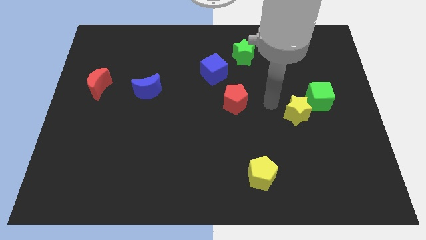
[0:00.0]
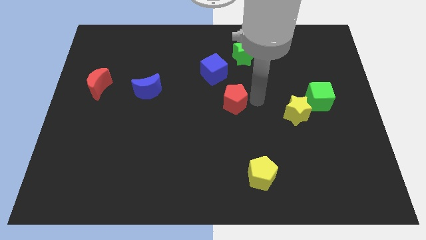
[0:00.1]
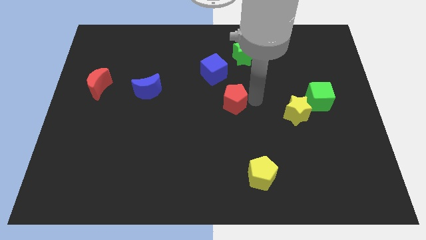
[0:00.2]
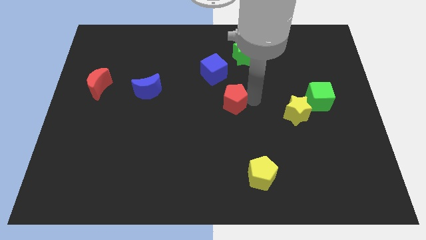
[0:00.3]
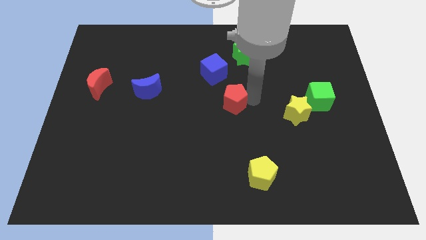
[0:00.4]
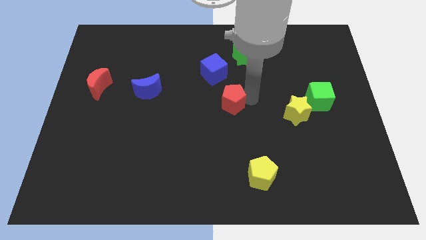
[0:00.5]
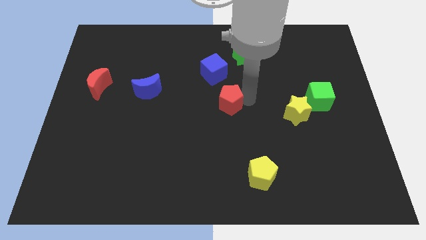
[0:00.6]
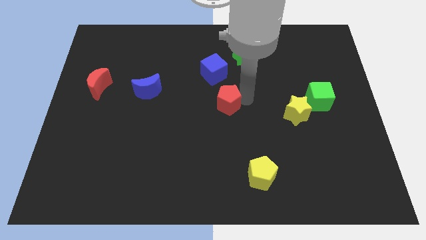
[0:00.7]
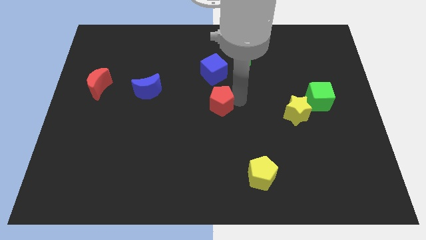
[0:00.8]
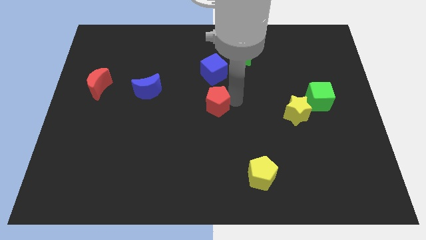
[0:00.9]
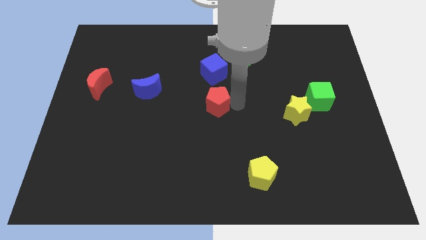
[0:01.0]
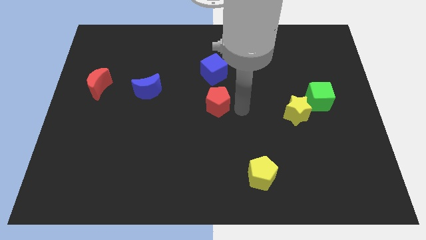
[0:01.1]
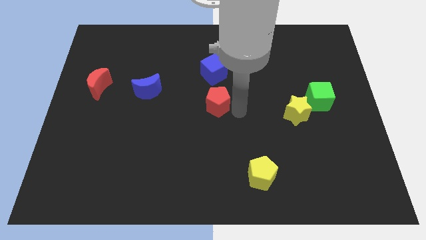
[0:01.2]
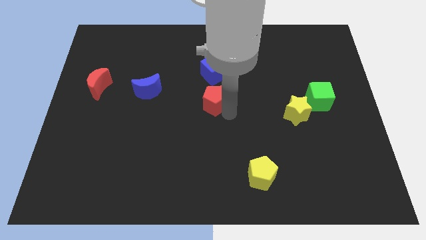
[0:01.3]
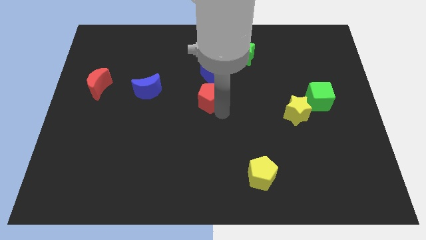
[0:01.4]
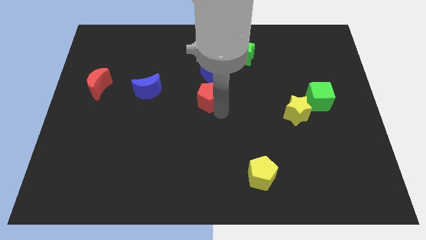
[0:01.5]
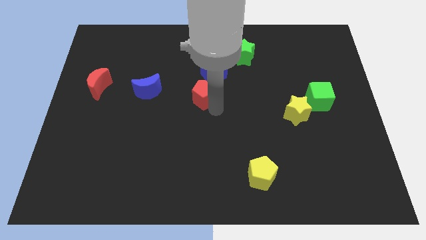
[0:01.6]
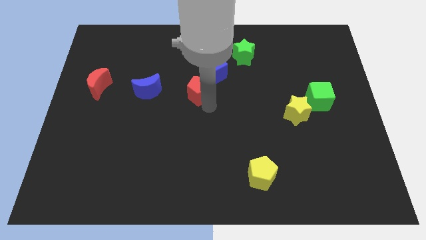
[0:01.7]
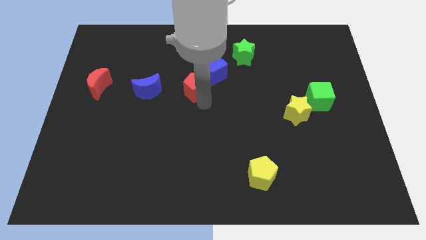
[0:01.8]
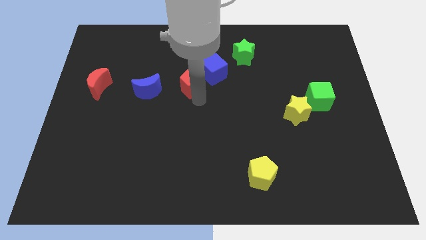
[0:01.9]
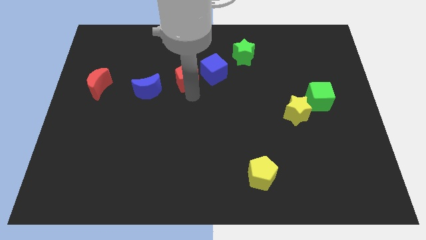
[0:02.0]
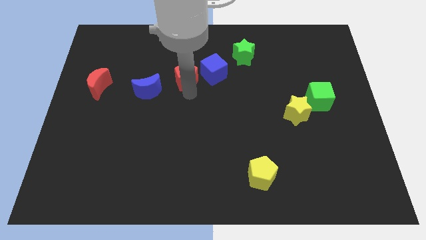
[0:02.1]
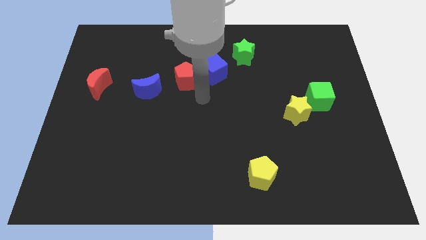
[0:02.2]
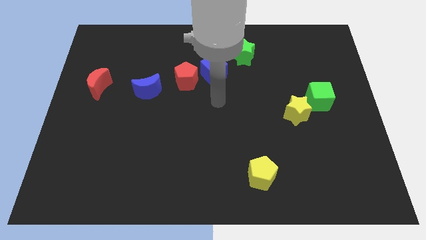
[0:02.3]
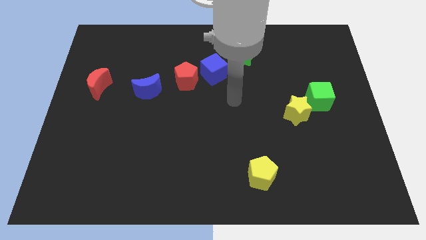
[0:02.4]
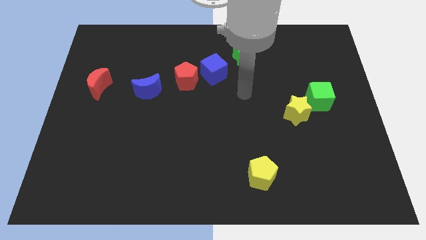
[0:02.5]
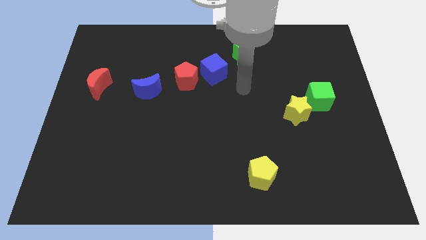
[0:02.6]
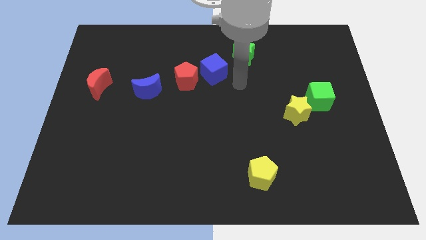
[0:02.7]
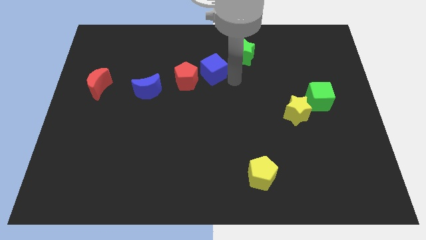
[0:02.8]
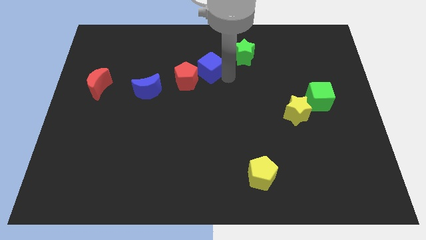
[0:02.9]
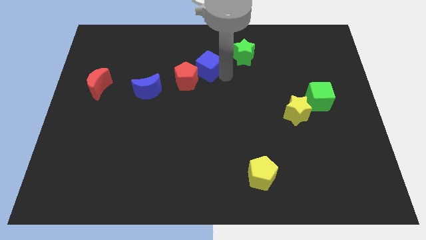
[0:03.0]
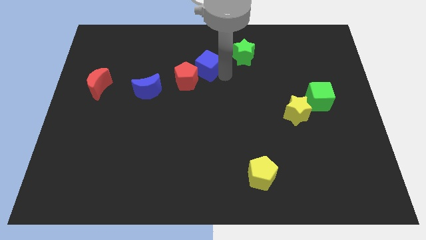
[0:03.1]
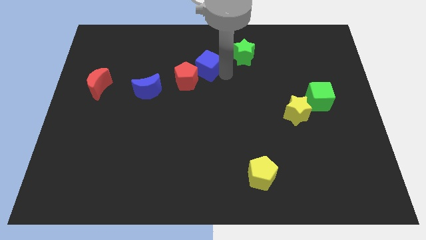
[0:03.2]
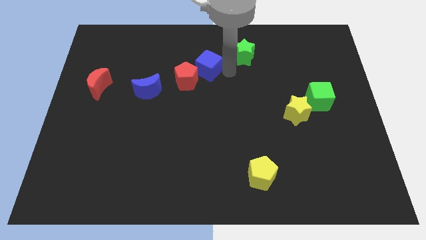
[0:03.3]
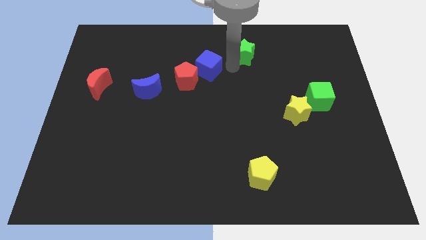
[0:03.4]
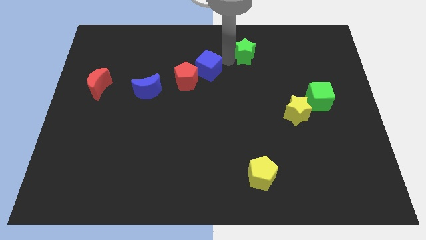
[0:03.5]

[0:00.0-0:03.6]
place the red pentagon and the blue cube in the horizontal line

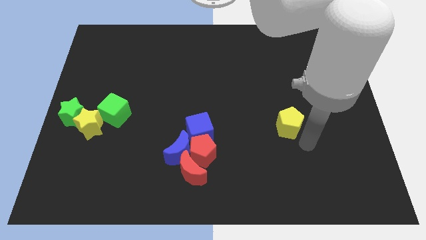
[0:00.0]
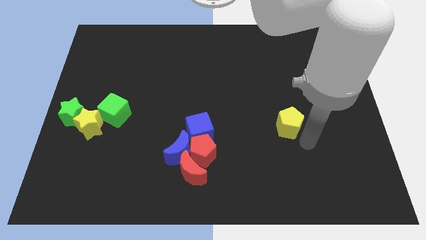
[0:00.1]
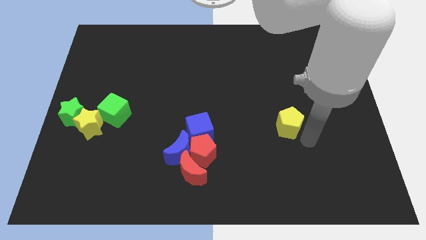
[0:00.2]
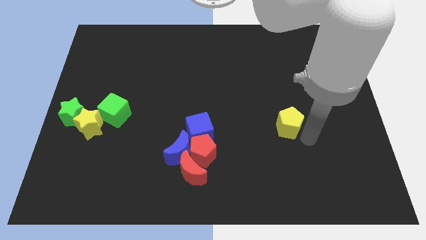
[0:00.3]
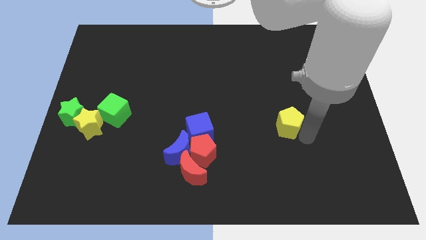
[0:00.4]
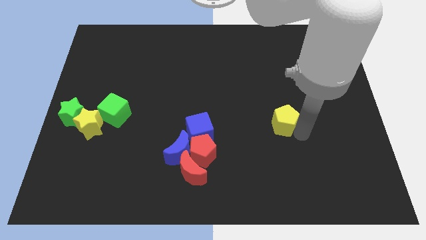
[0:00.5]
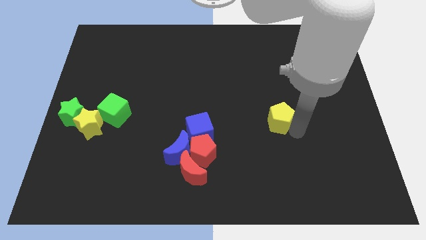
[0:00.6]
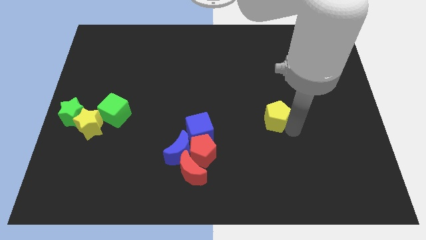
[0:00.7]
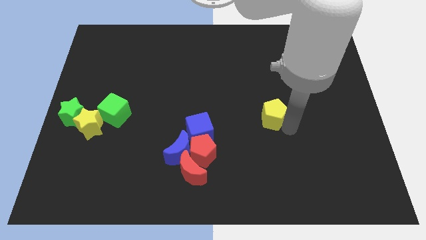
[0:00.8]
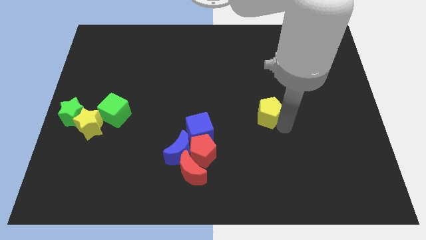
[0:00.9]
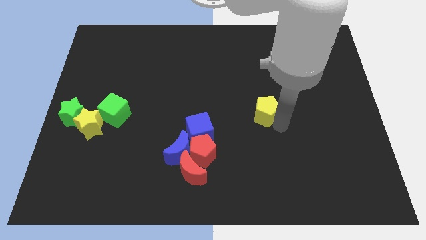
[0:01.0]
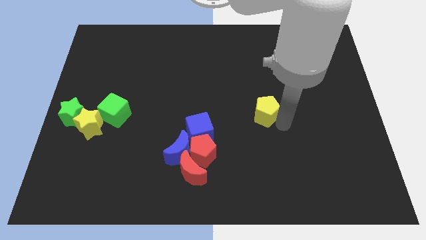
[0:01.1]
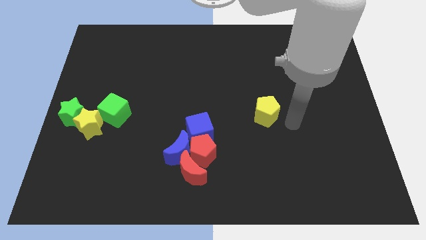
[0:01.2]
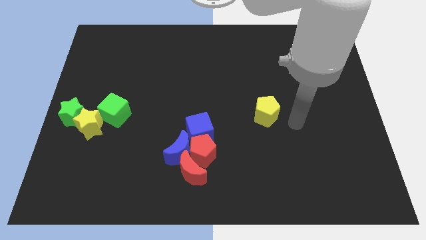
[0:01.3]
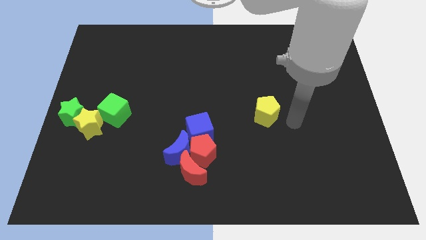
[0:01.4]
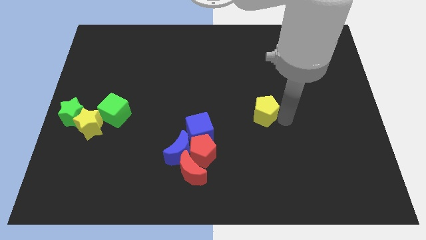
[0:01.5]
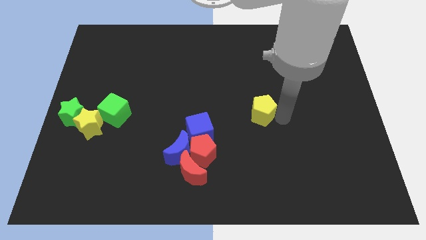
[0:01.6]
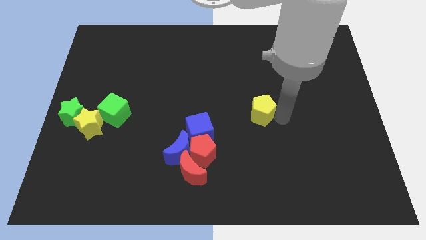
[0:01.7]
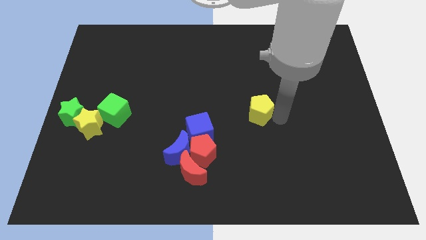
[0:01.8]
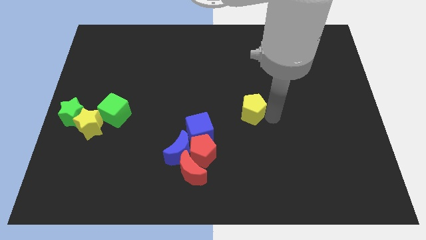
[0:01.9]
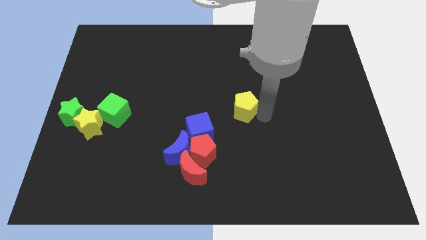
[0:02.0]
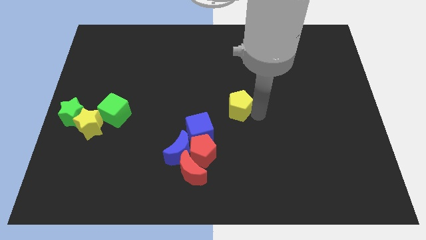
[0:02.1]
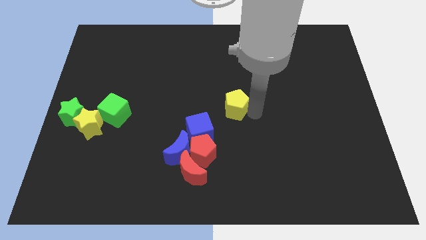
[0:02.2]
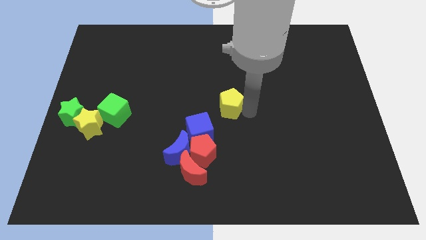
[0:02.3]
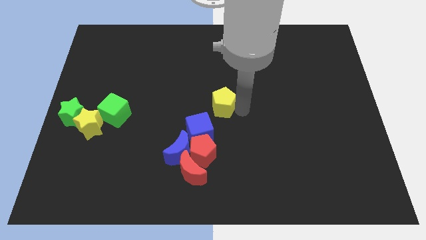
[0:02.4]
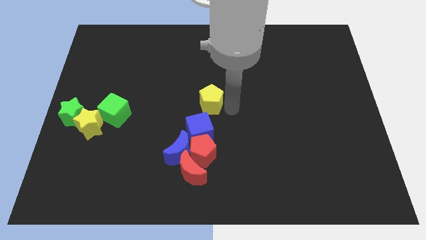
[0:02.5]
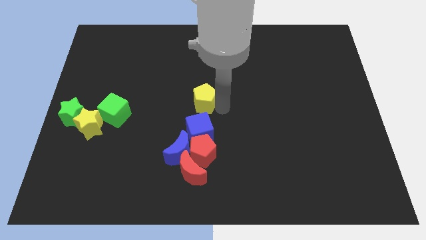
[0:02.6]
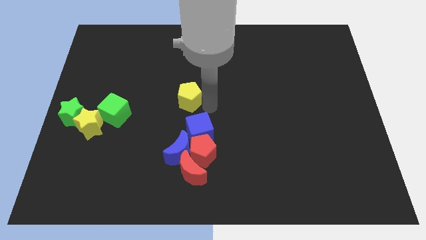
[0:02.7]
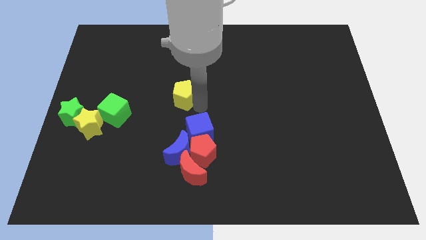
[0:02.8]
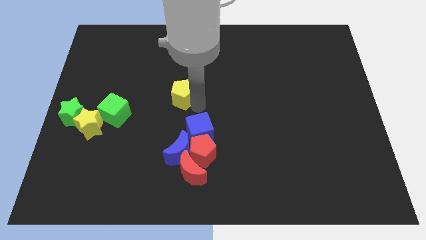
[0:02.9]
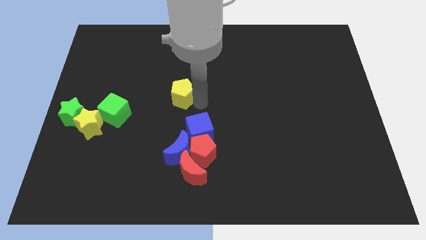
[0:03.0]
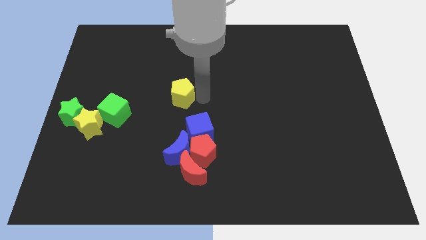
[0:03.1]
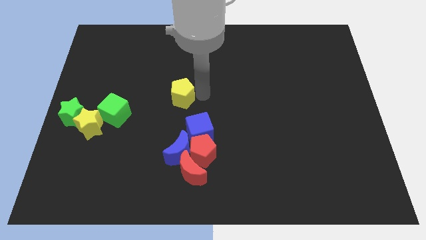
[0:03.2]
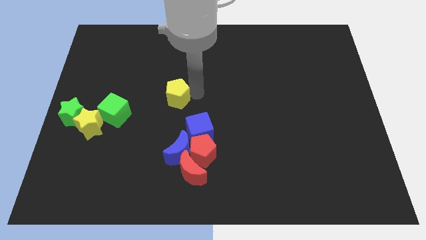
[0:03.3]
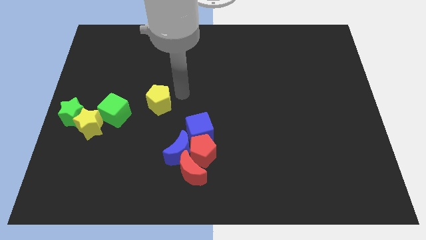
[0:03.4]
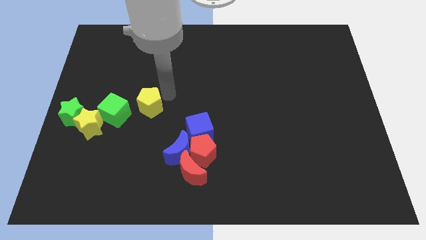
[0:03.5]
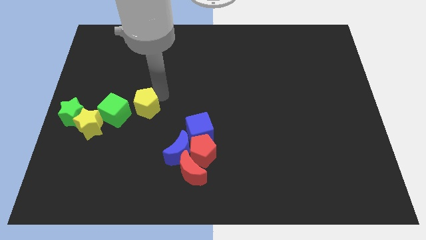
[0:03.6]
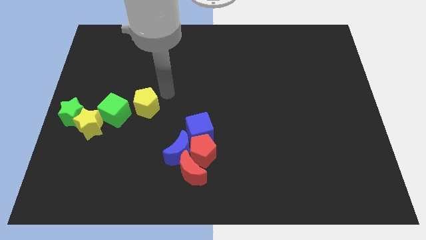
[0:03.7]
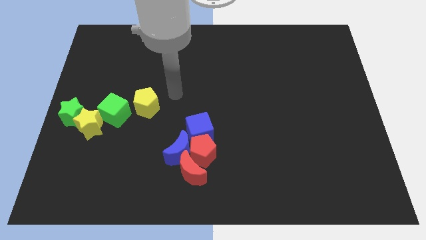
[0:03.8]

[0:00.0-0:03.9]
move the yellow pentagon to the right of green cube

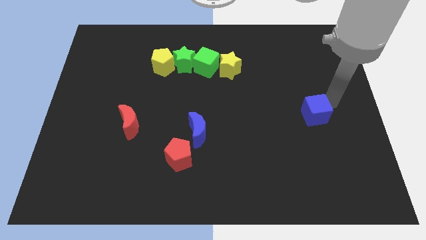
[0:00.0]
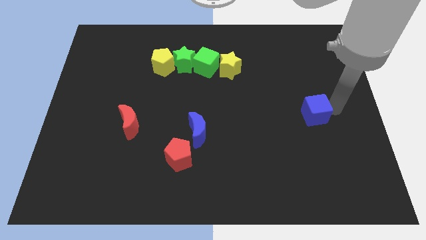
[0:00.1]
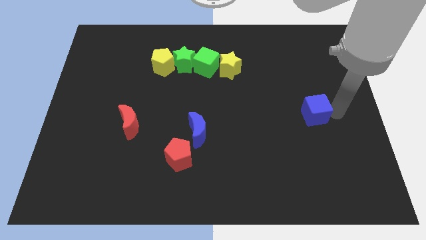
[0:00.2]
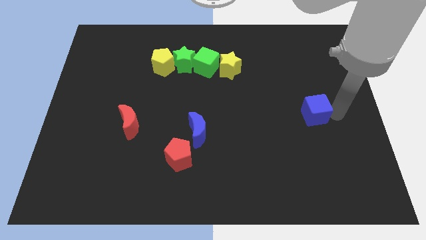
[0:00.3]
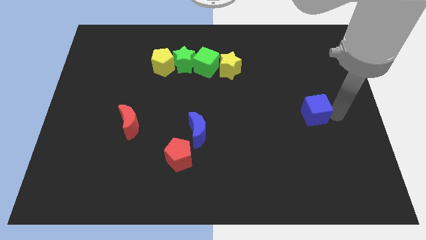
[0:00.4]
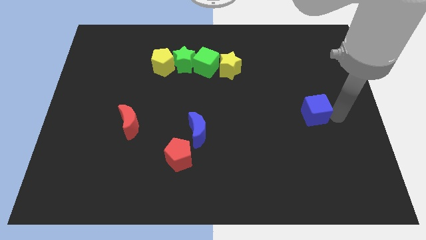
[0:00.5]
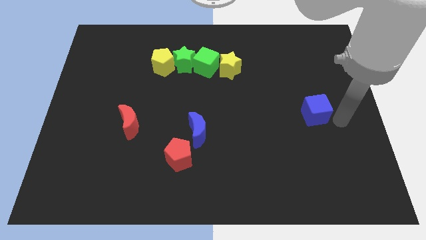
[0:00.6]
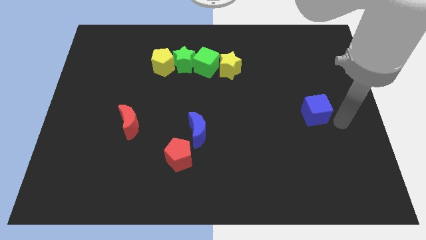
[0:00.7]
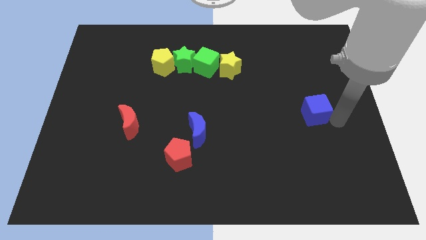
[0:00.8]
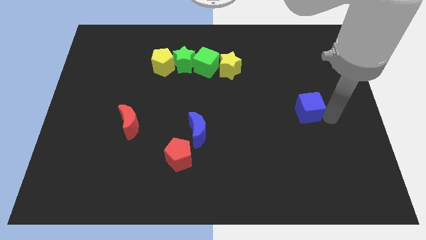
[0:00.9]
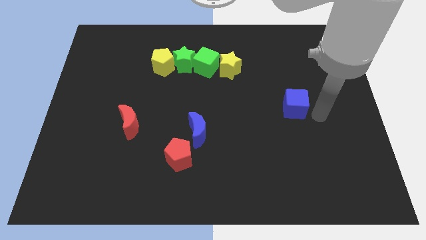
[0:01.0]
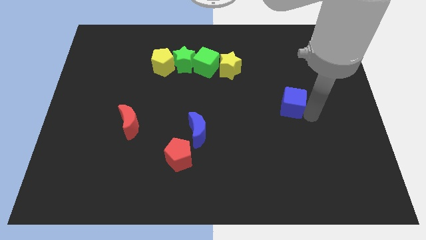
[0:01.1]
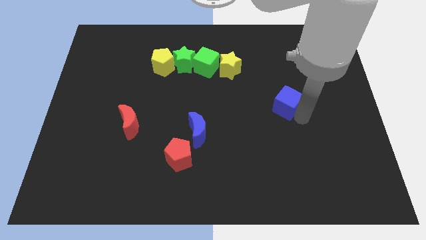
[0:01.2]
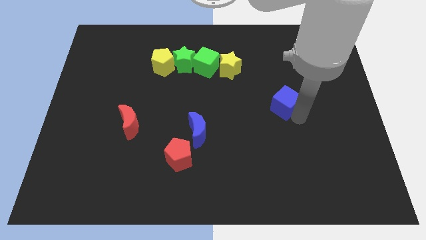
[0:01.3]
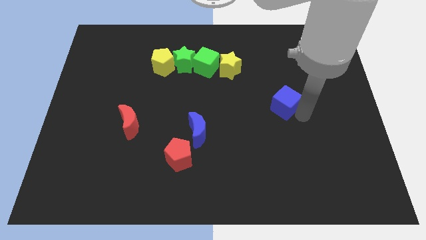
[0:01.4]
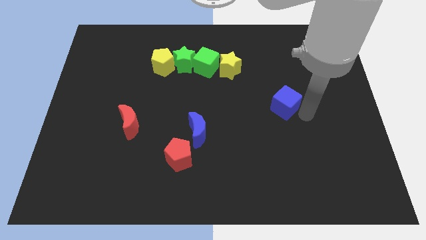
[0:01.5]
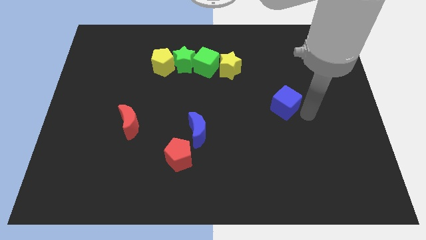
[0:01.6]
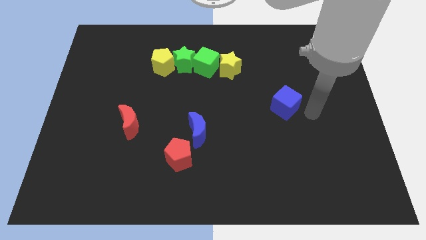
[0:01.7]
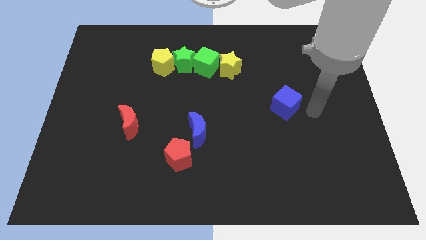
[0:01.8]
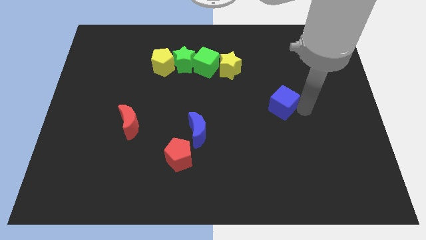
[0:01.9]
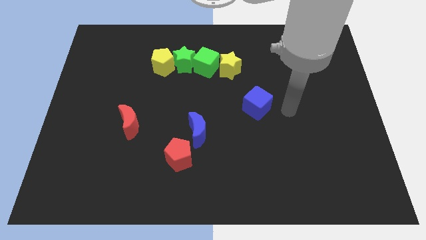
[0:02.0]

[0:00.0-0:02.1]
move the blue cube to the bottom right of the yellow star
